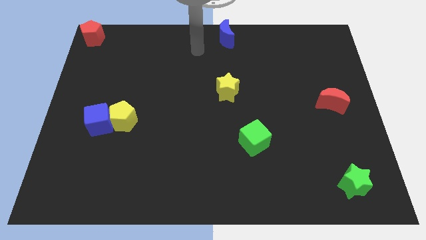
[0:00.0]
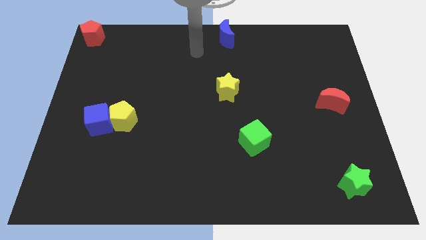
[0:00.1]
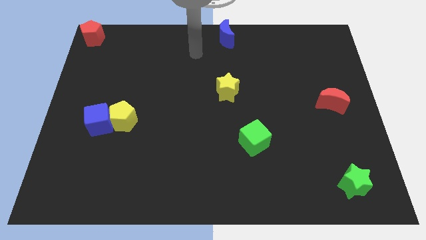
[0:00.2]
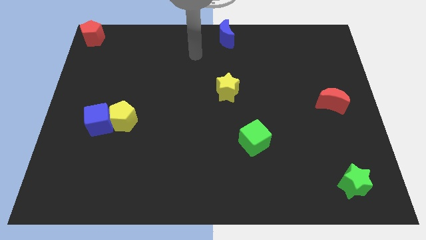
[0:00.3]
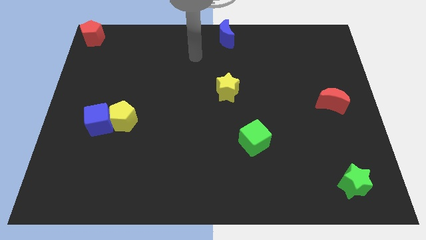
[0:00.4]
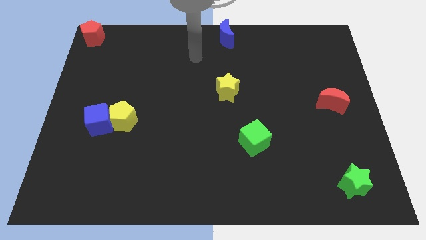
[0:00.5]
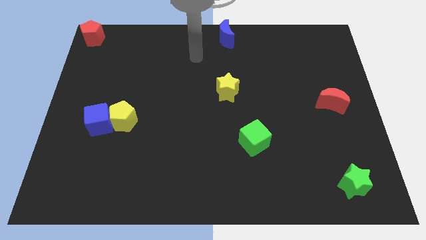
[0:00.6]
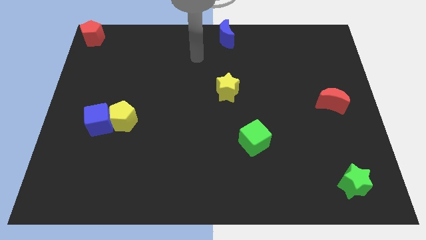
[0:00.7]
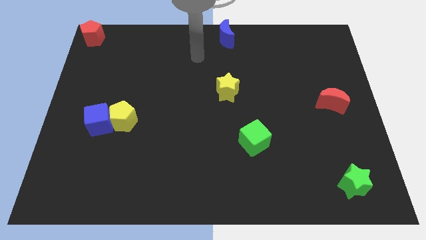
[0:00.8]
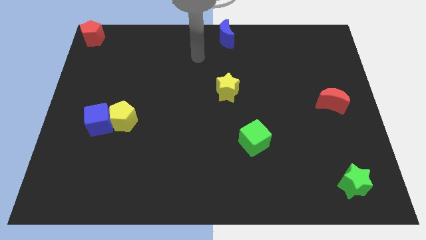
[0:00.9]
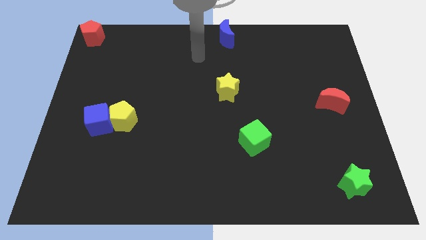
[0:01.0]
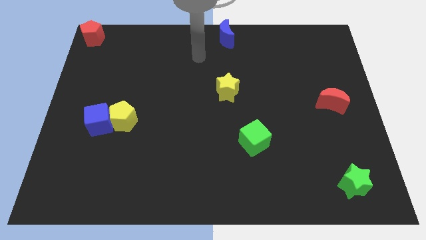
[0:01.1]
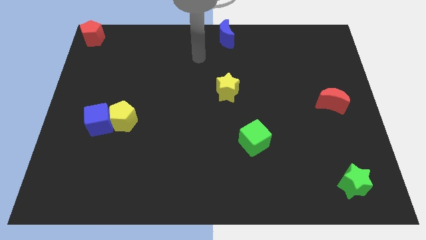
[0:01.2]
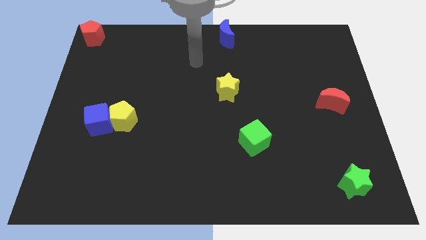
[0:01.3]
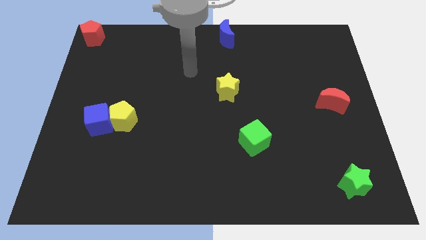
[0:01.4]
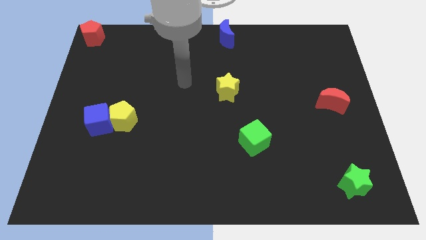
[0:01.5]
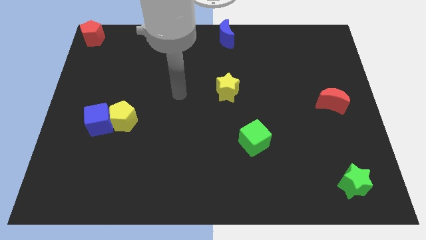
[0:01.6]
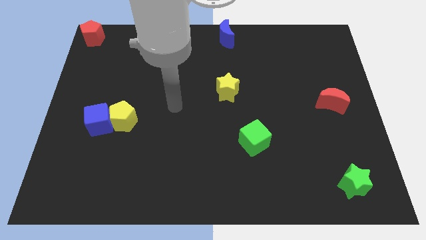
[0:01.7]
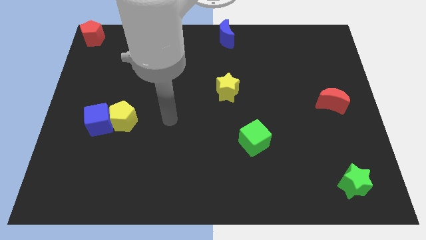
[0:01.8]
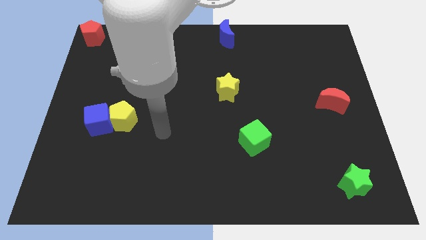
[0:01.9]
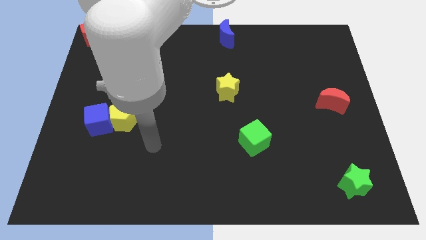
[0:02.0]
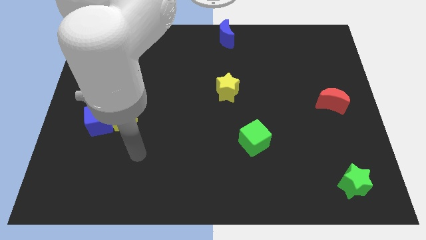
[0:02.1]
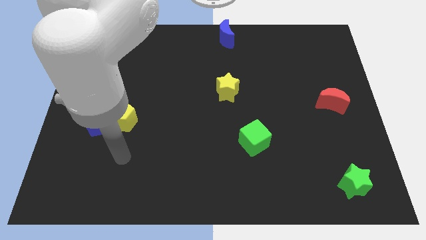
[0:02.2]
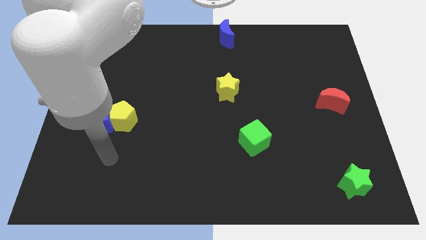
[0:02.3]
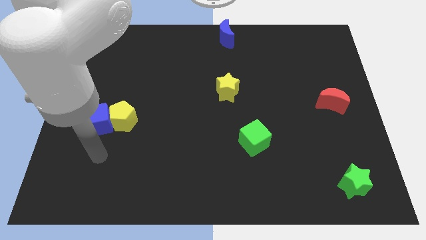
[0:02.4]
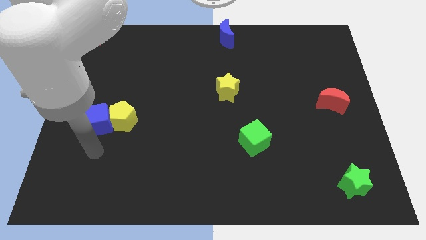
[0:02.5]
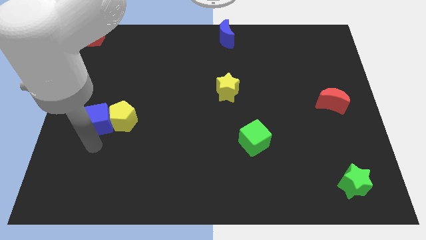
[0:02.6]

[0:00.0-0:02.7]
move the arm to the blue cube

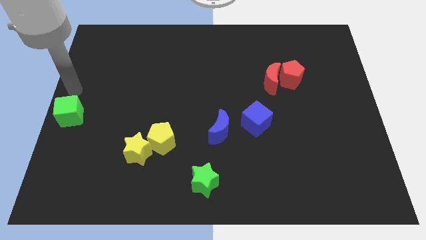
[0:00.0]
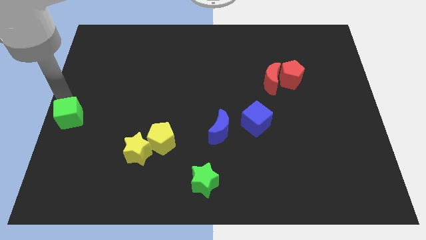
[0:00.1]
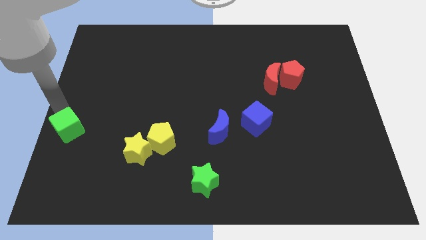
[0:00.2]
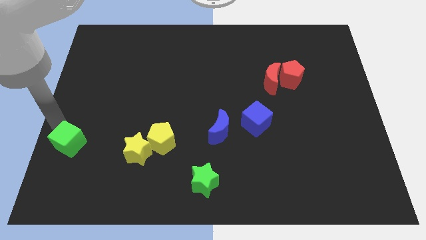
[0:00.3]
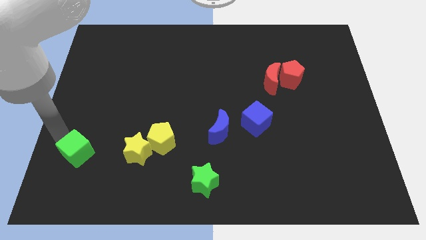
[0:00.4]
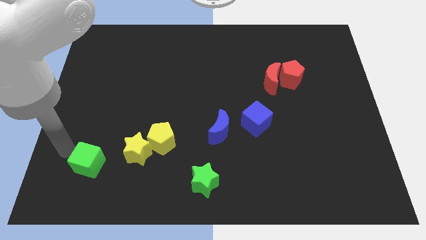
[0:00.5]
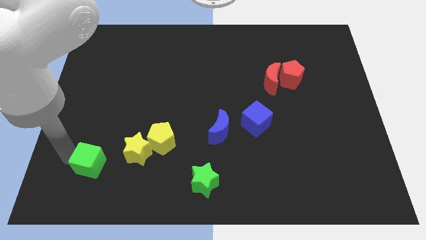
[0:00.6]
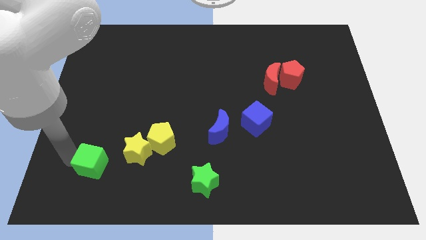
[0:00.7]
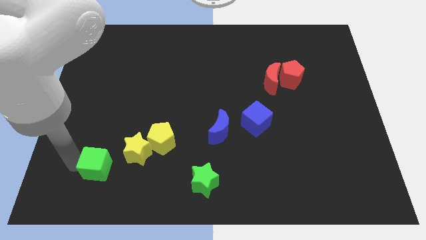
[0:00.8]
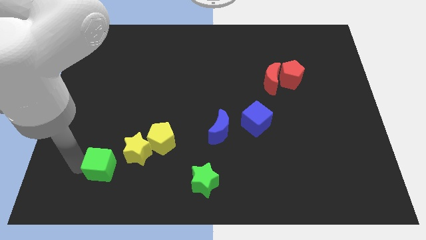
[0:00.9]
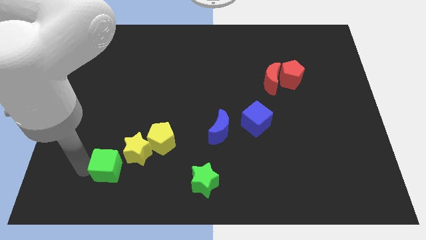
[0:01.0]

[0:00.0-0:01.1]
move the green cube towards the green star

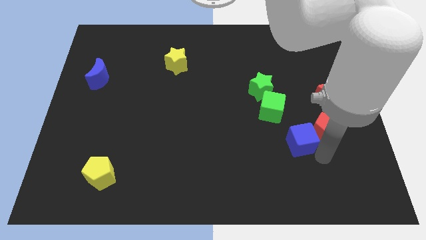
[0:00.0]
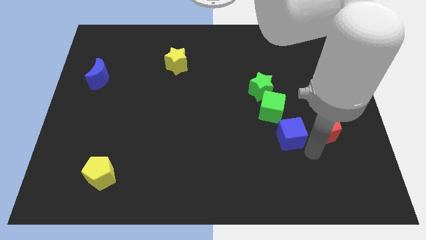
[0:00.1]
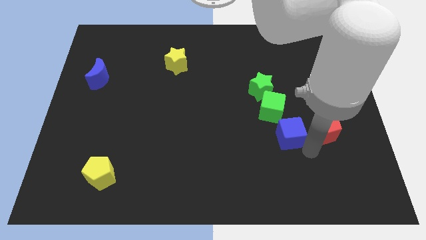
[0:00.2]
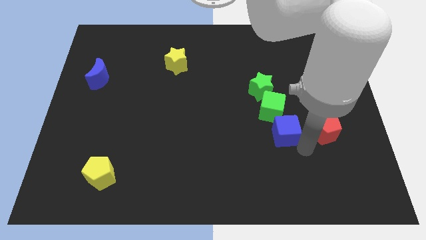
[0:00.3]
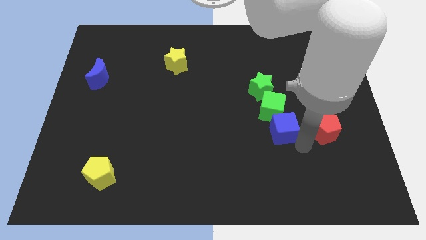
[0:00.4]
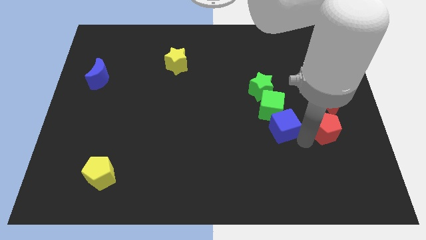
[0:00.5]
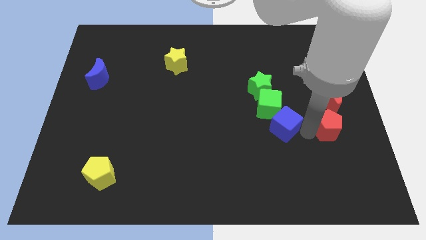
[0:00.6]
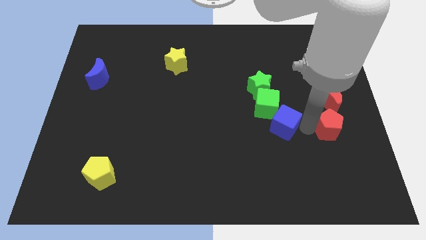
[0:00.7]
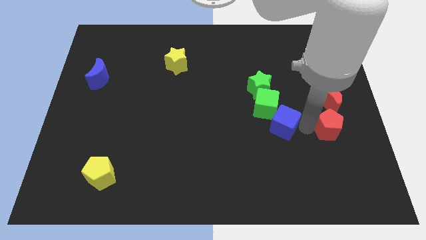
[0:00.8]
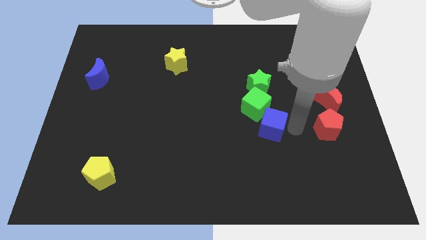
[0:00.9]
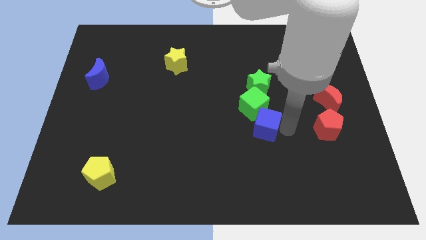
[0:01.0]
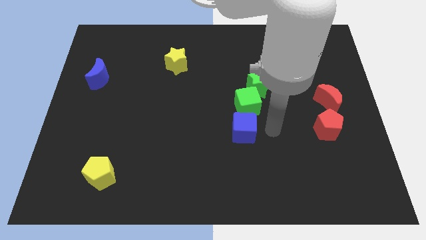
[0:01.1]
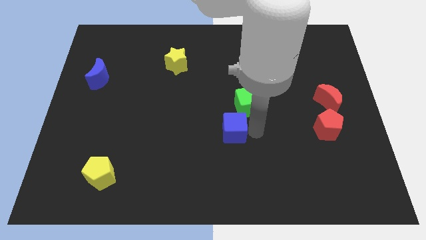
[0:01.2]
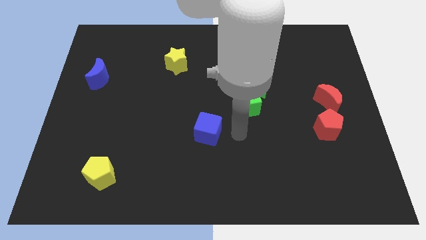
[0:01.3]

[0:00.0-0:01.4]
push the blue cube to the center of the board

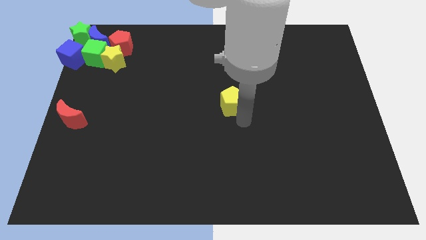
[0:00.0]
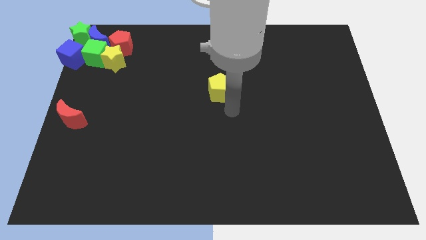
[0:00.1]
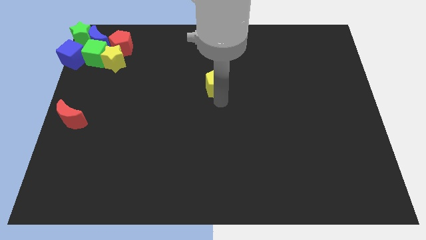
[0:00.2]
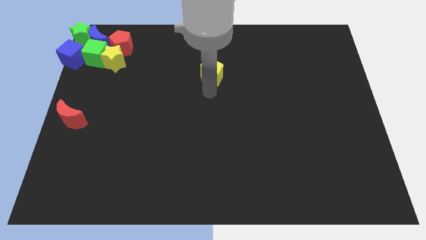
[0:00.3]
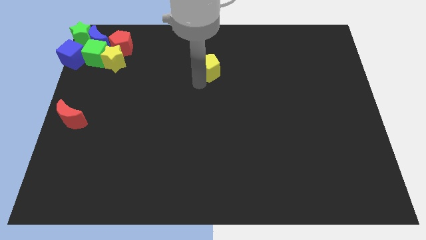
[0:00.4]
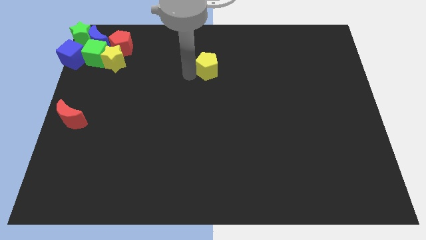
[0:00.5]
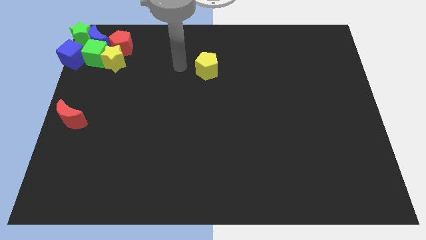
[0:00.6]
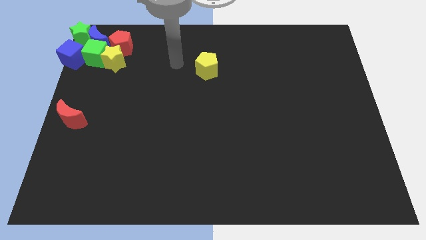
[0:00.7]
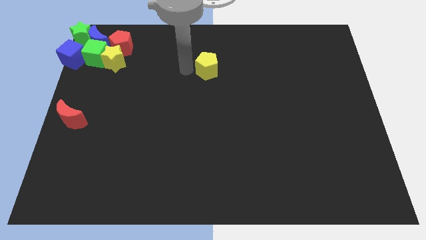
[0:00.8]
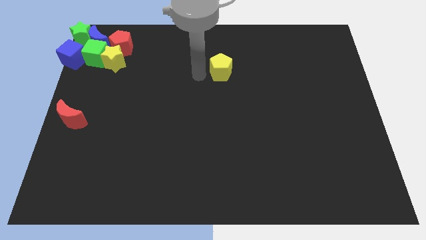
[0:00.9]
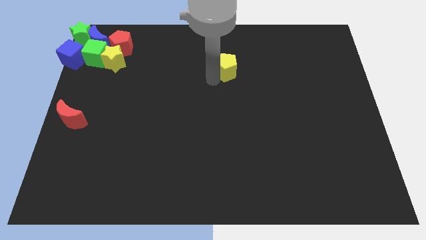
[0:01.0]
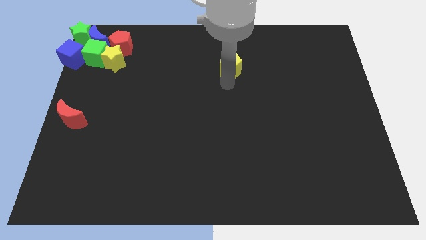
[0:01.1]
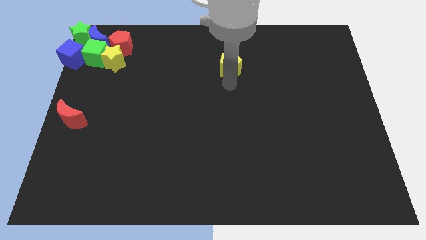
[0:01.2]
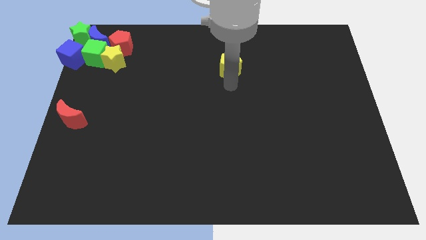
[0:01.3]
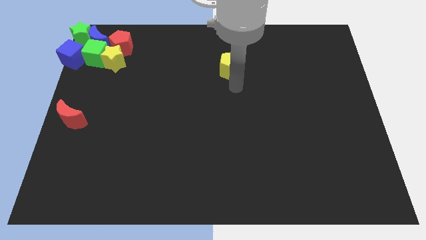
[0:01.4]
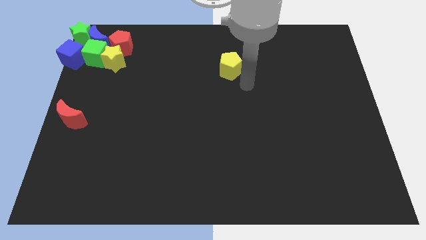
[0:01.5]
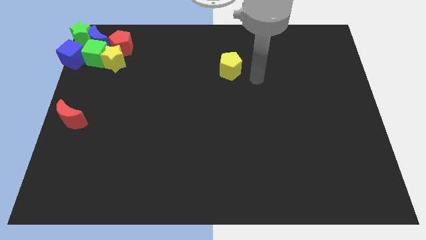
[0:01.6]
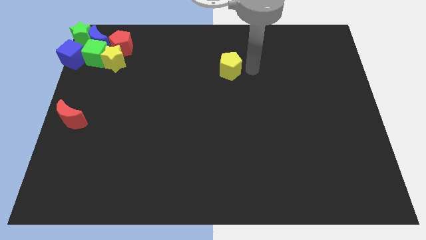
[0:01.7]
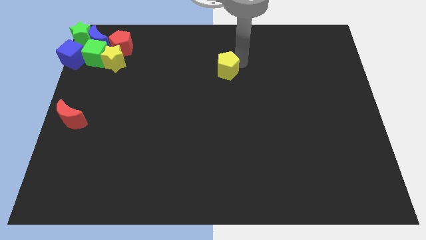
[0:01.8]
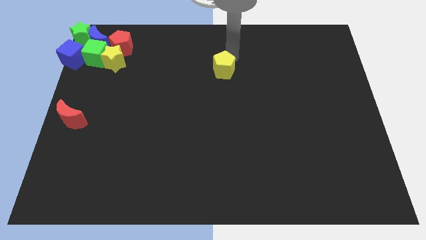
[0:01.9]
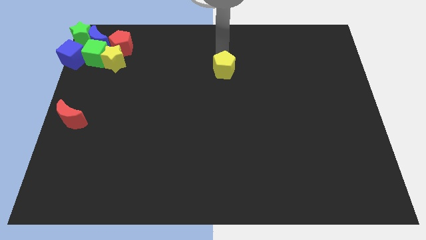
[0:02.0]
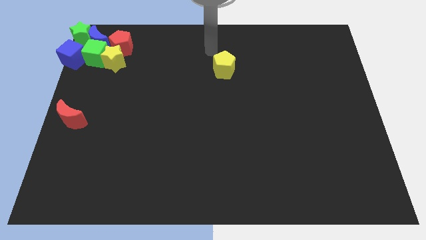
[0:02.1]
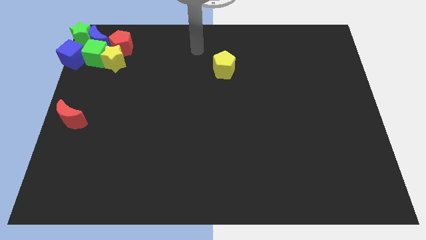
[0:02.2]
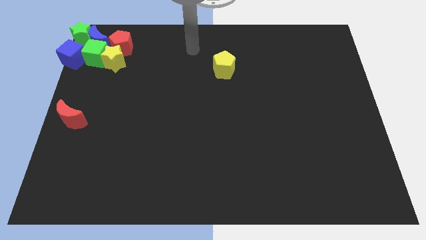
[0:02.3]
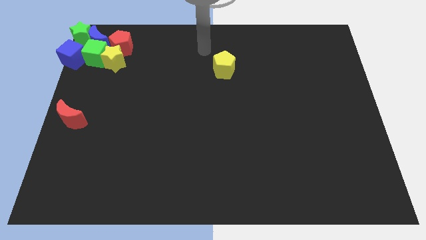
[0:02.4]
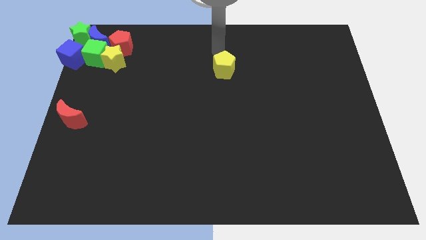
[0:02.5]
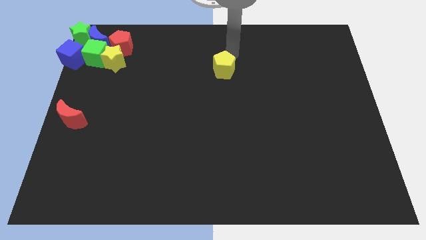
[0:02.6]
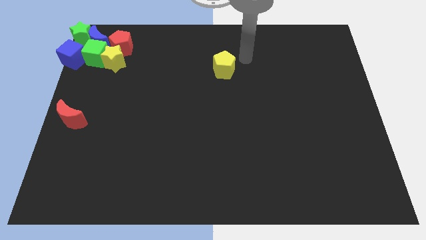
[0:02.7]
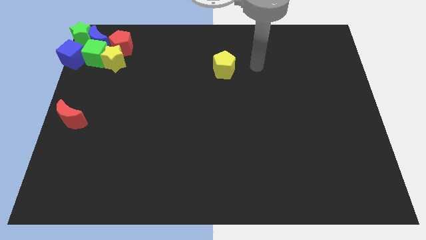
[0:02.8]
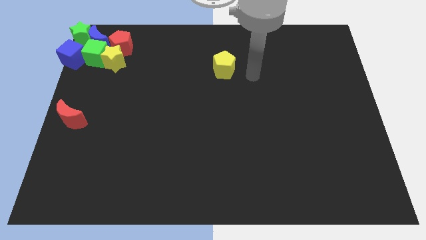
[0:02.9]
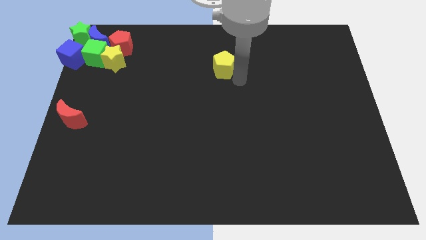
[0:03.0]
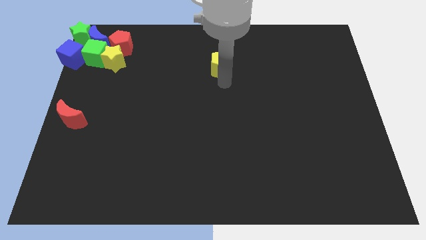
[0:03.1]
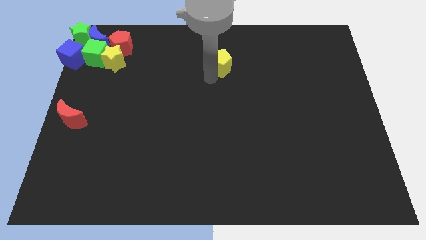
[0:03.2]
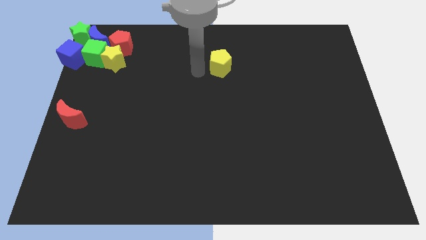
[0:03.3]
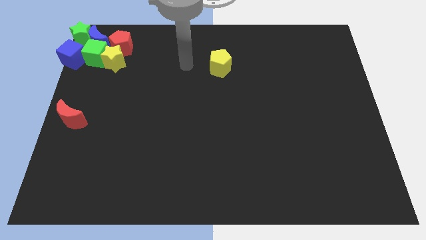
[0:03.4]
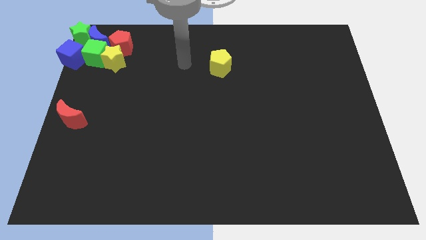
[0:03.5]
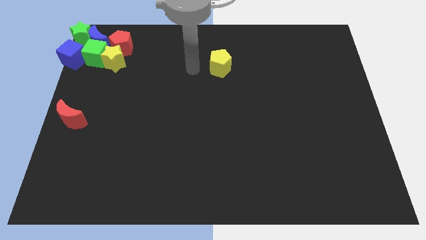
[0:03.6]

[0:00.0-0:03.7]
move the yellow pentagon horizontally to the top center

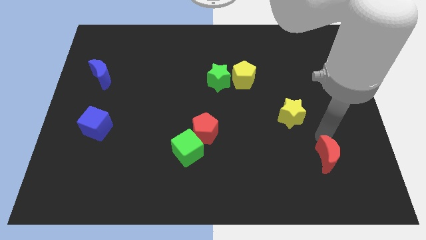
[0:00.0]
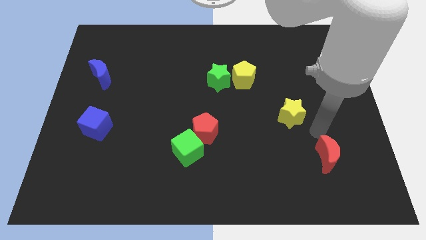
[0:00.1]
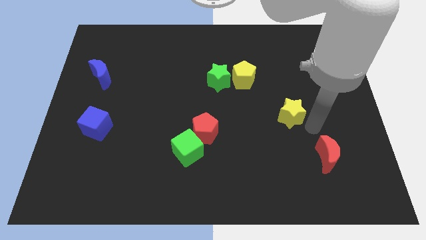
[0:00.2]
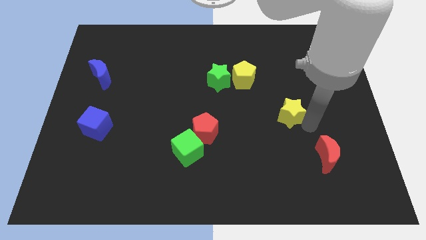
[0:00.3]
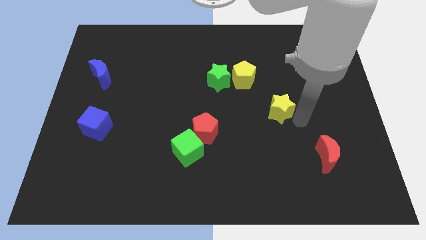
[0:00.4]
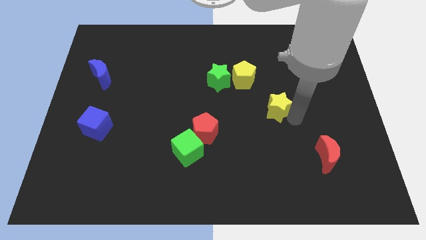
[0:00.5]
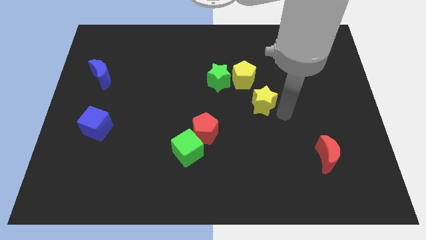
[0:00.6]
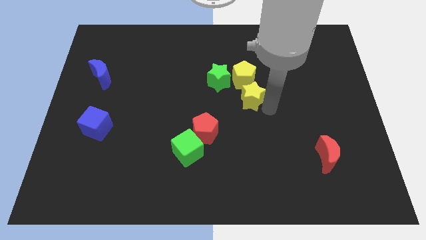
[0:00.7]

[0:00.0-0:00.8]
place the yellow star at the bottom of yellow pentagon
